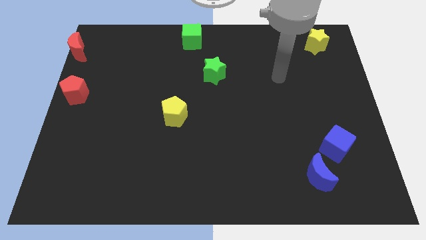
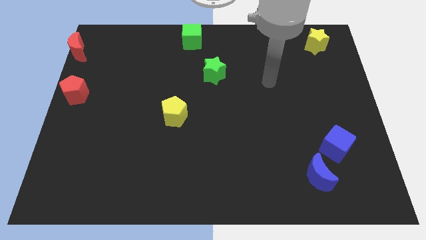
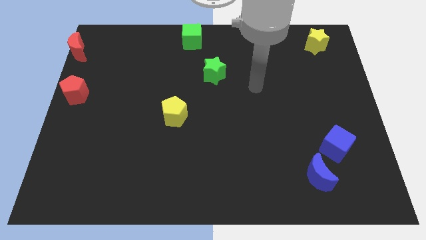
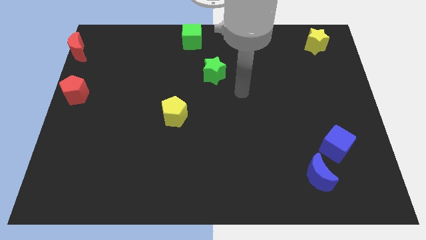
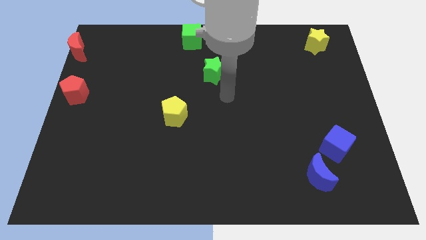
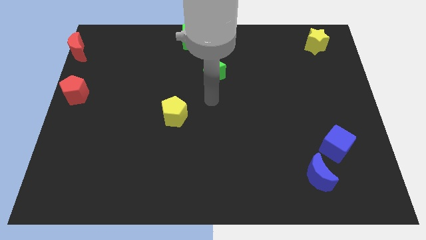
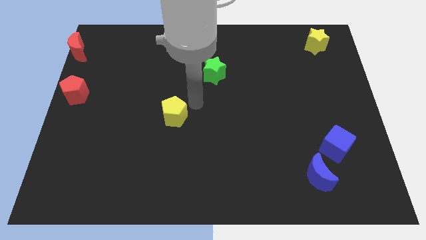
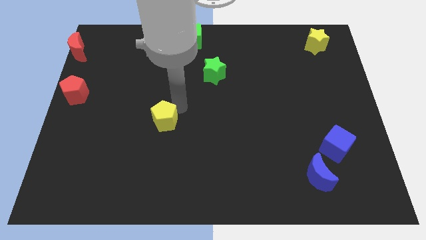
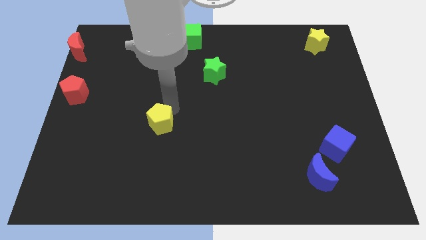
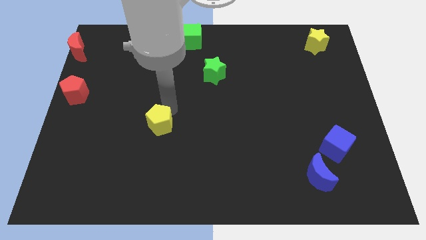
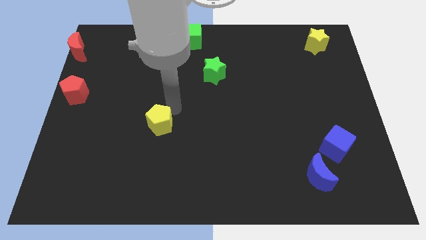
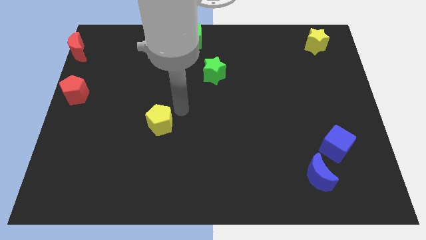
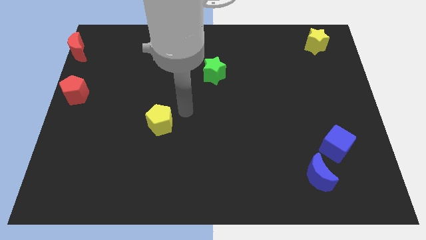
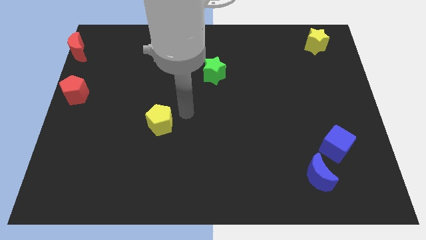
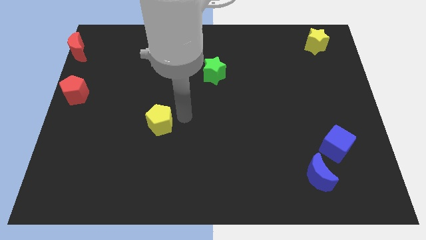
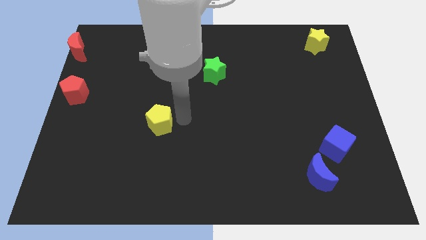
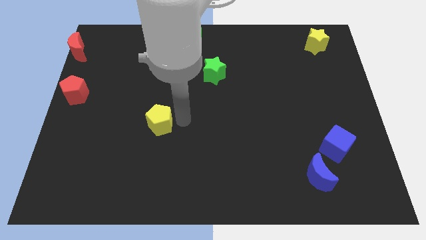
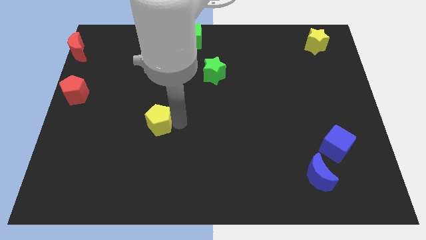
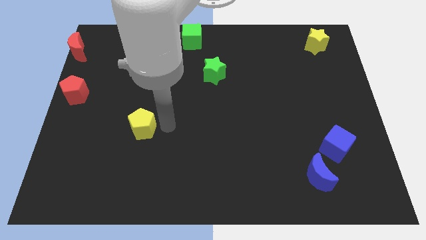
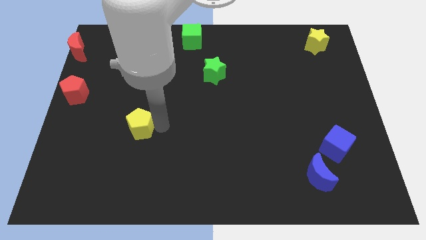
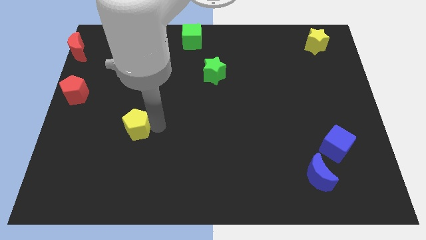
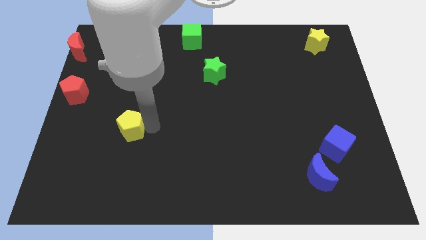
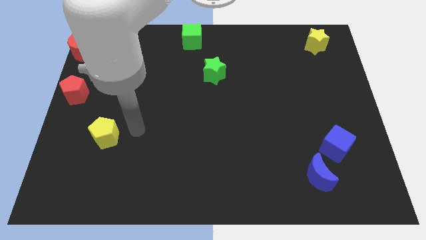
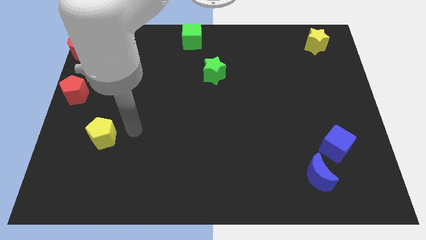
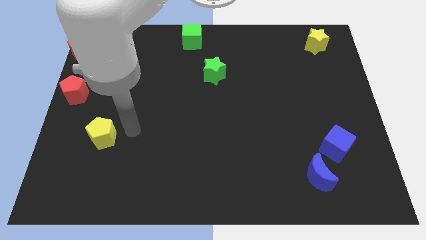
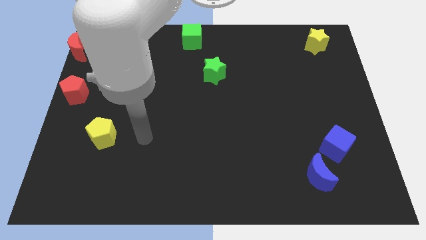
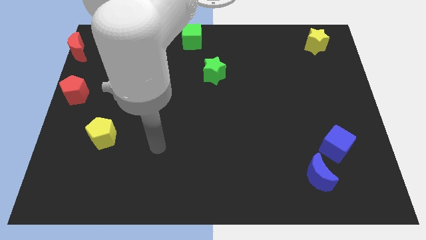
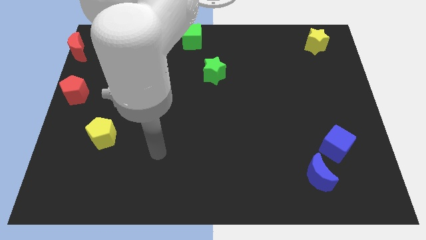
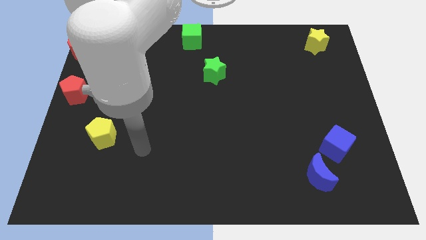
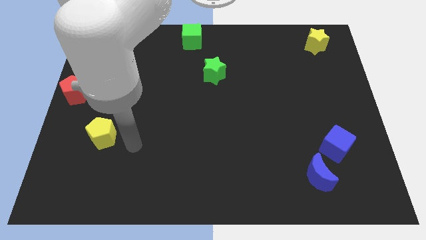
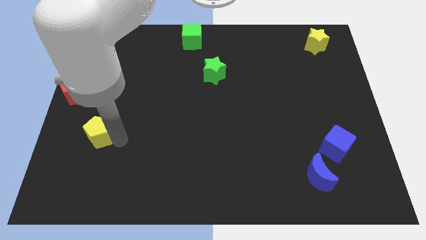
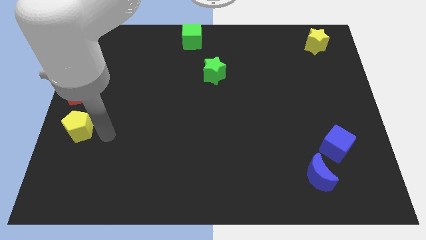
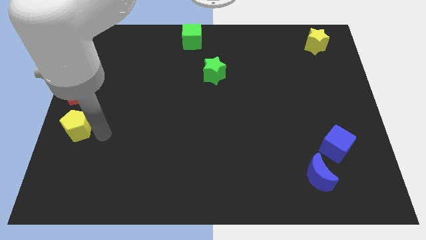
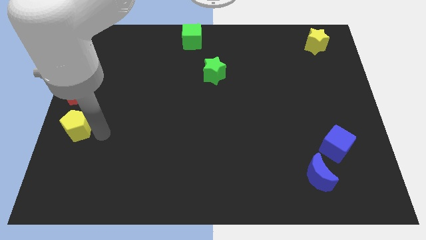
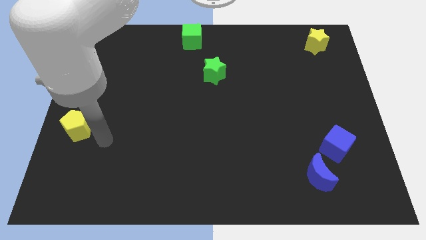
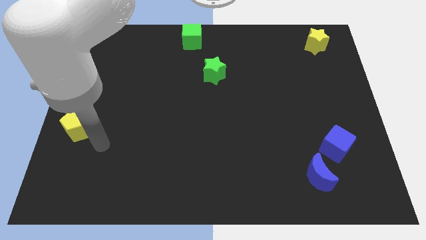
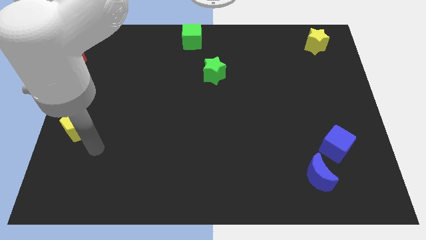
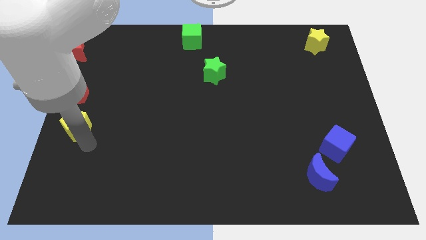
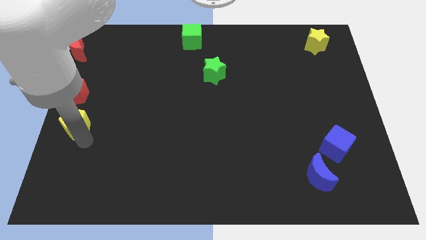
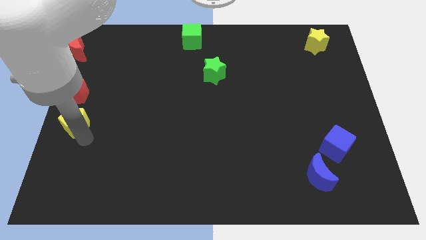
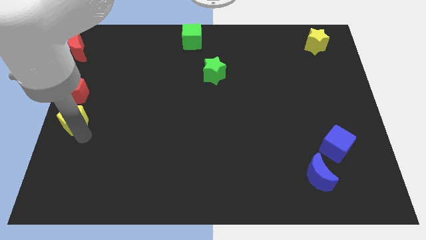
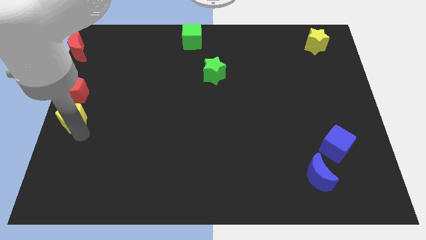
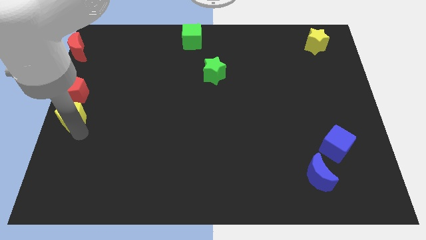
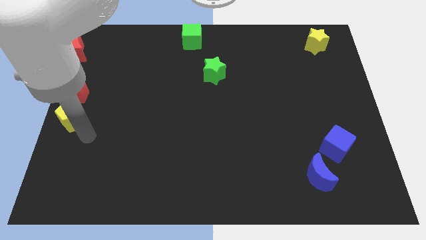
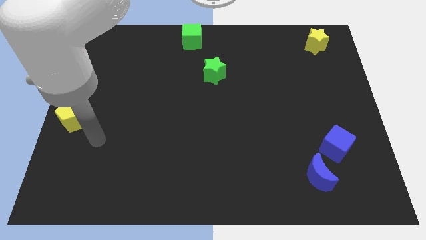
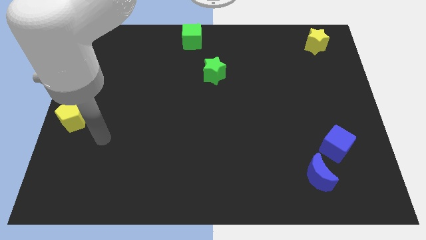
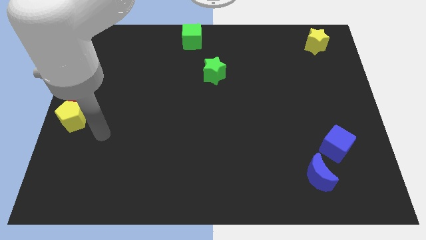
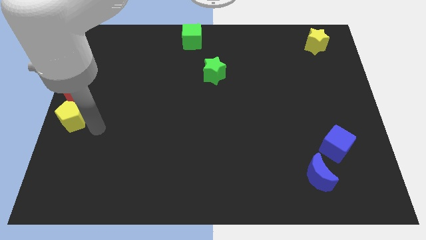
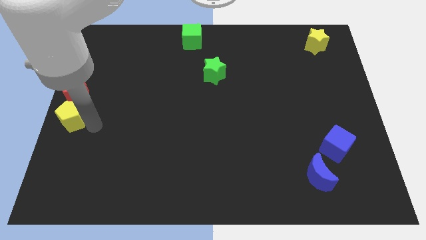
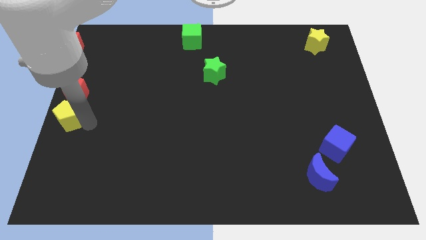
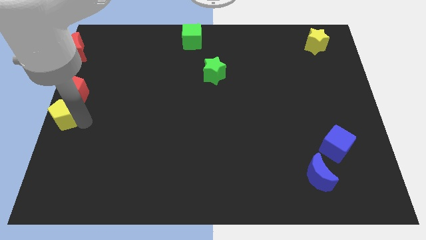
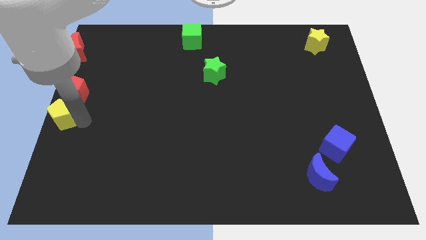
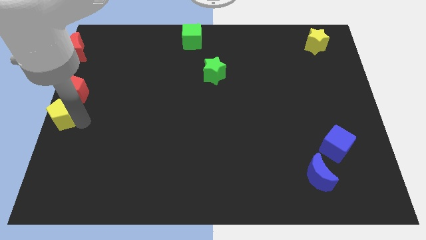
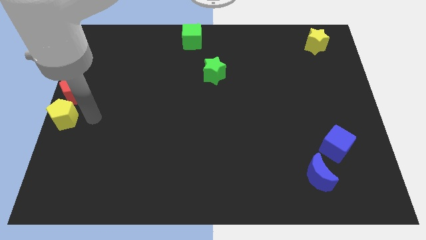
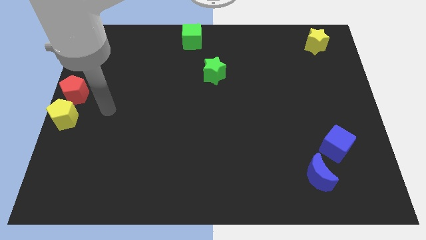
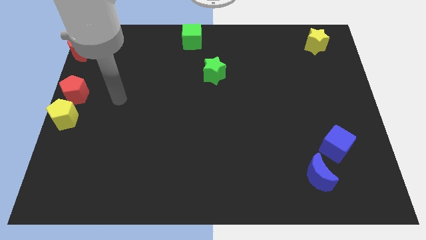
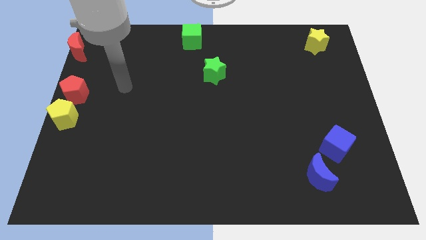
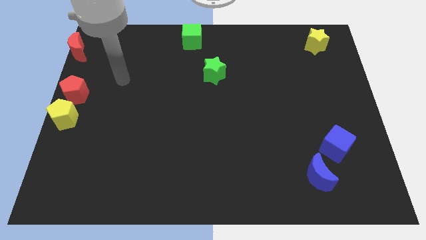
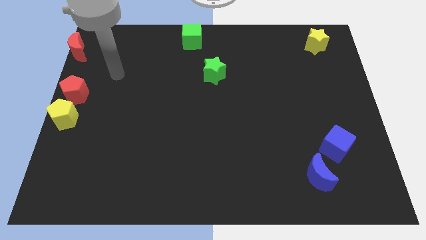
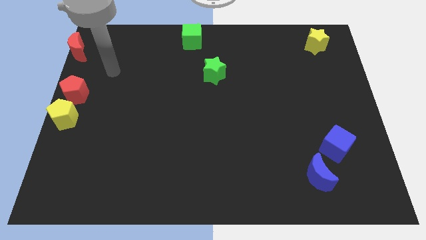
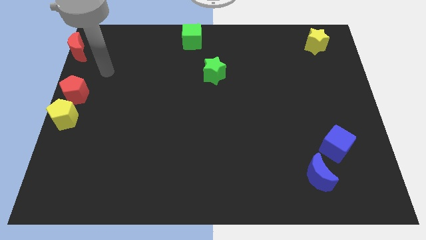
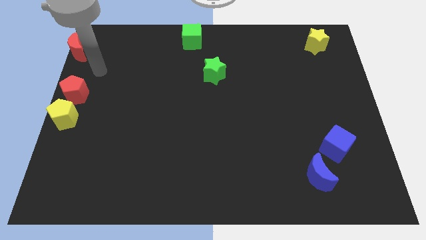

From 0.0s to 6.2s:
move the yellow pentagon at the bottom of the red pentagon

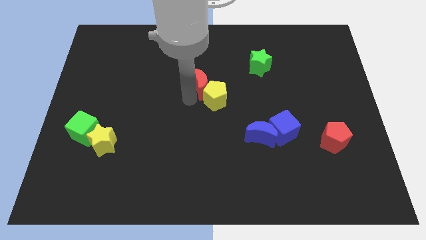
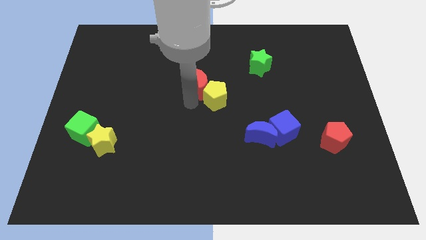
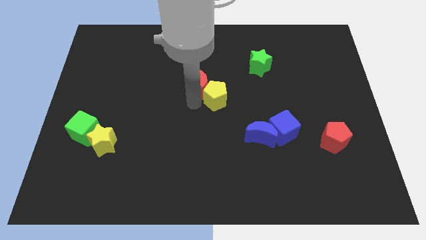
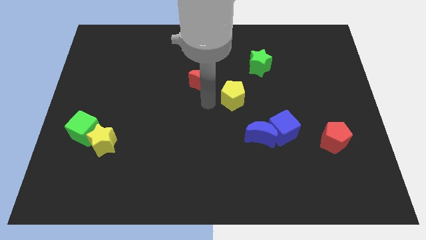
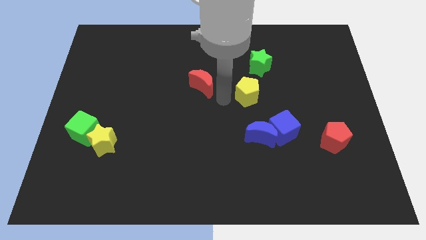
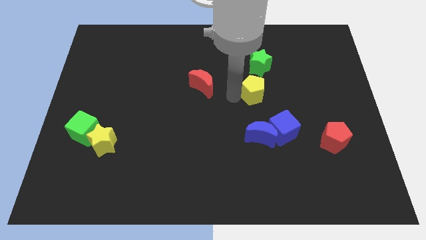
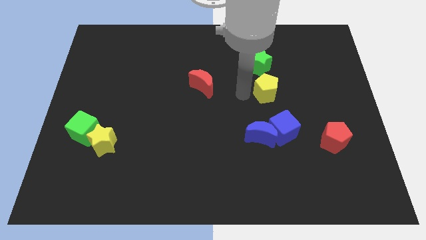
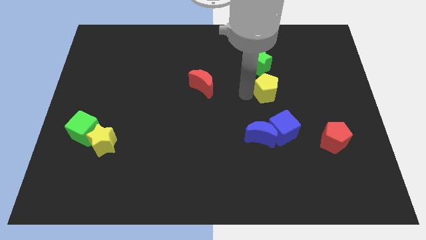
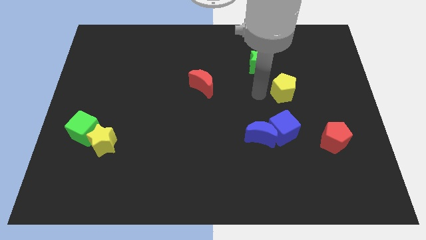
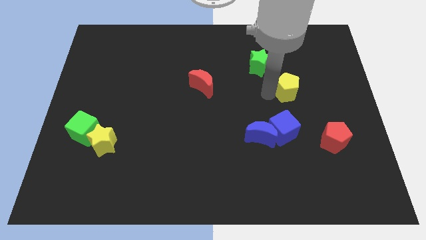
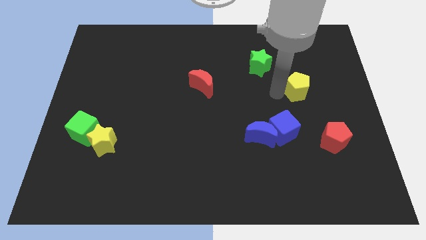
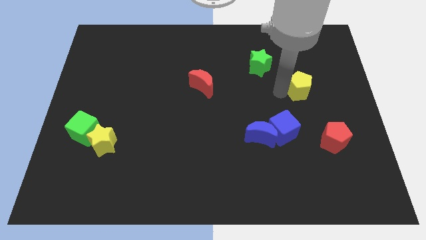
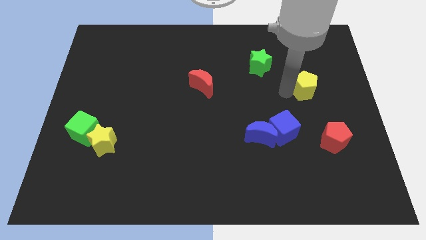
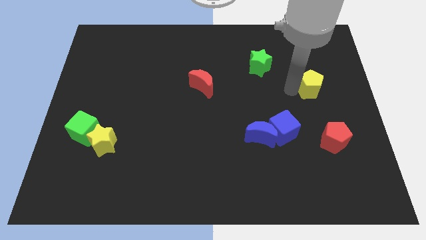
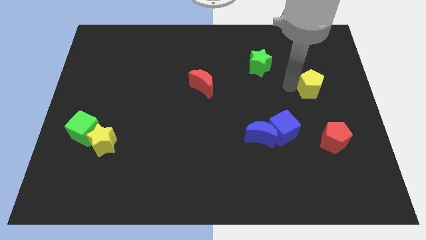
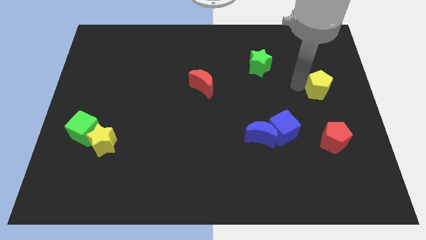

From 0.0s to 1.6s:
separate the yellow pentagon from the red crescent

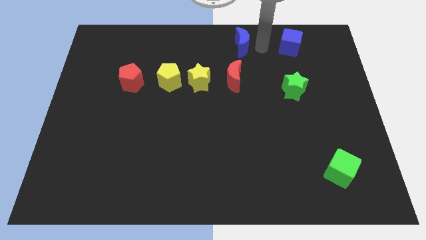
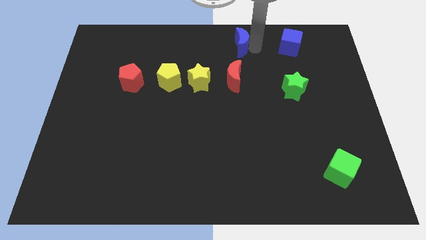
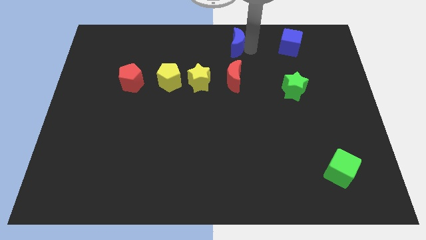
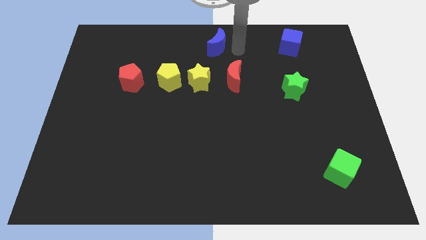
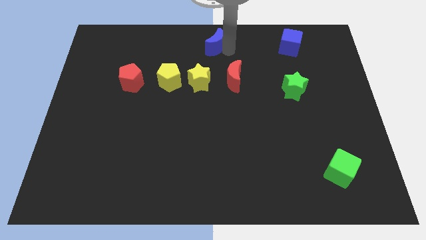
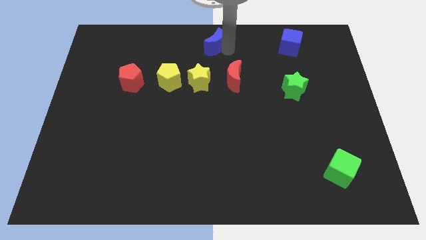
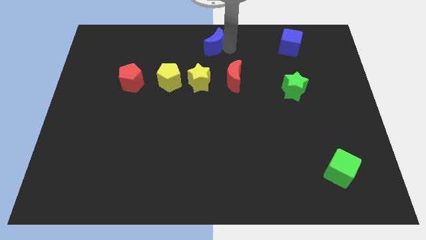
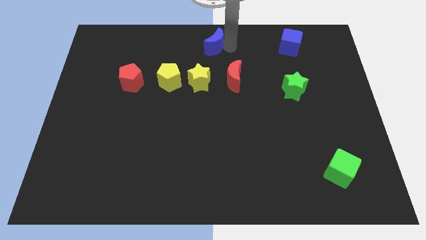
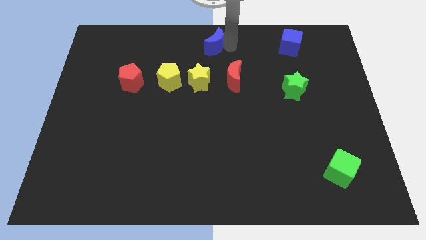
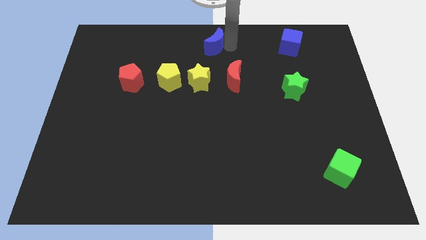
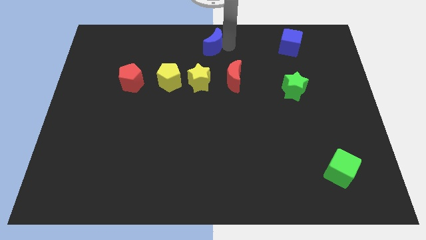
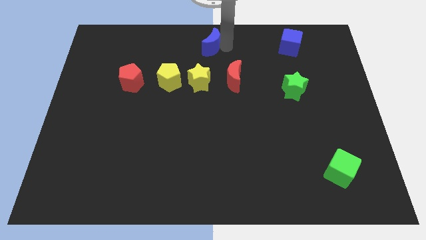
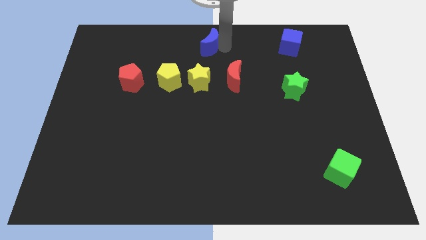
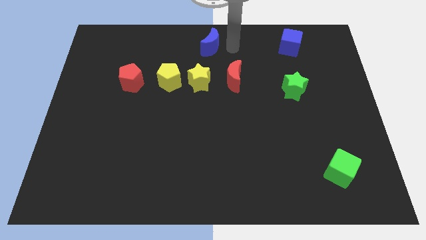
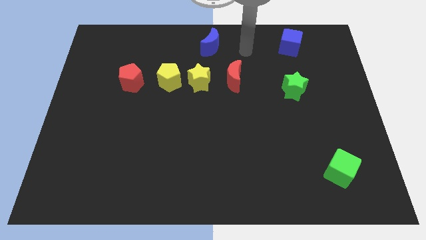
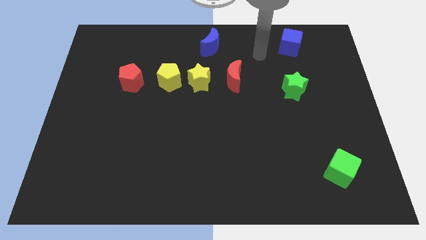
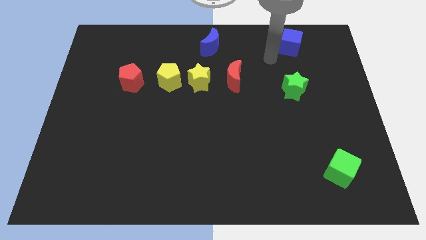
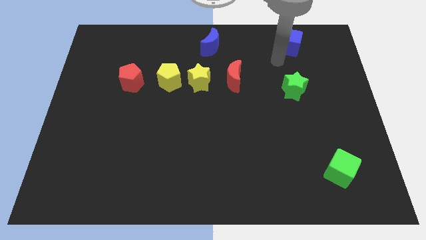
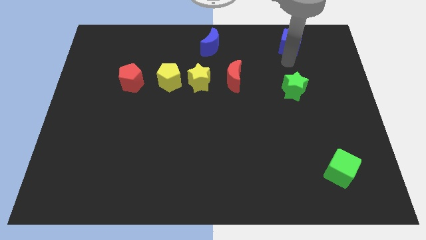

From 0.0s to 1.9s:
move the blue moon to the top of the yellow star
